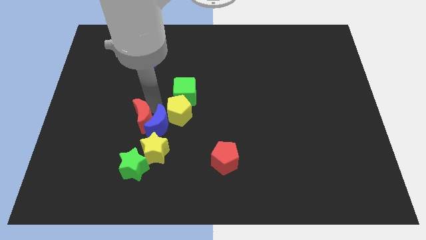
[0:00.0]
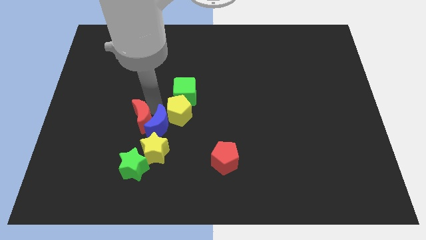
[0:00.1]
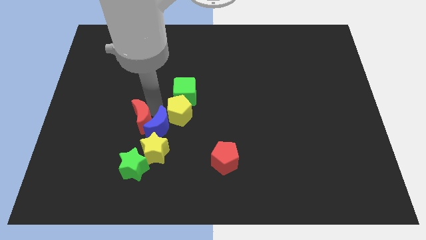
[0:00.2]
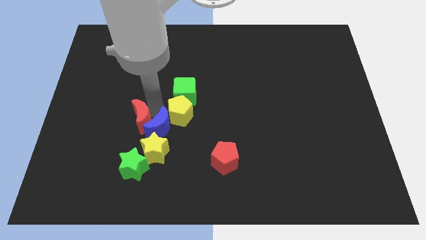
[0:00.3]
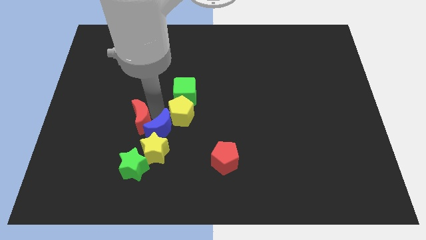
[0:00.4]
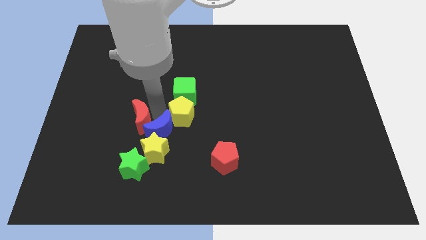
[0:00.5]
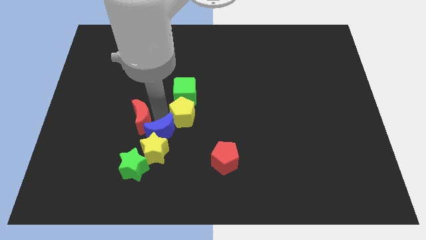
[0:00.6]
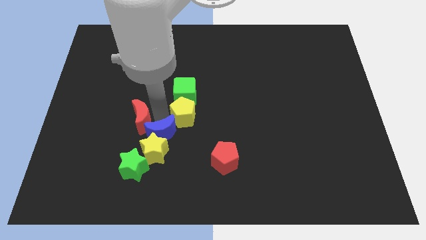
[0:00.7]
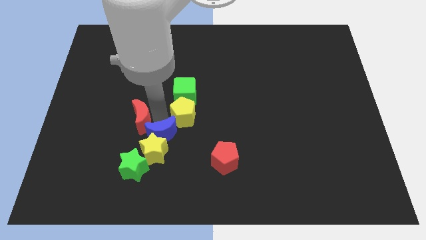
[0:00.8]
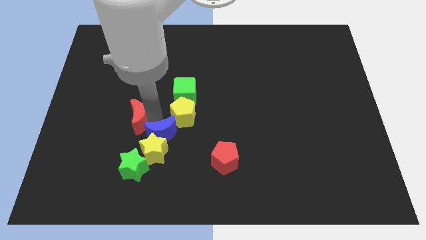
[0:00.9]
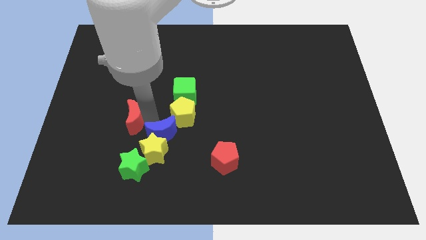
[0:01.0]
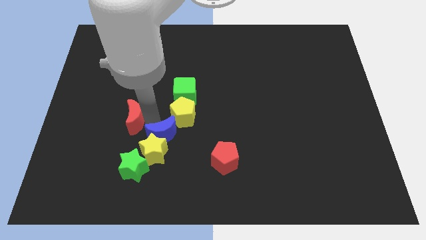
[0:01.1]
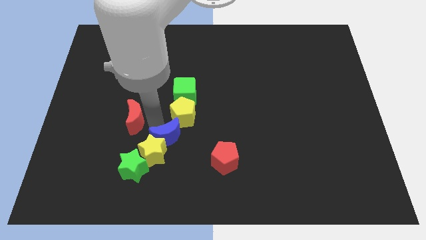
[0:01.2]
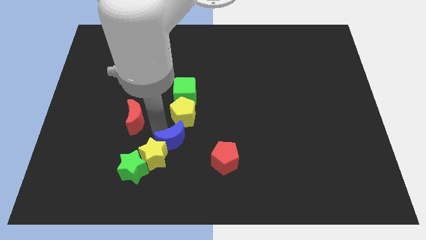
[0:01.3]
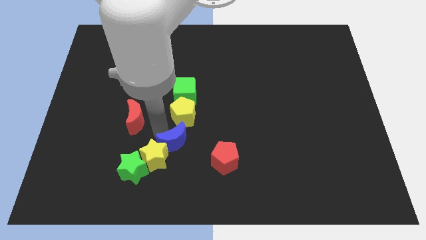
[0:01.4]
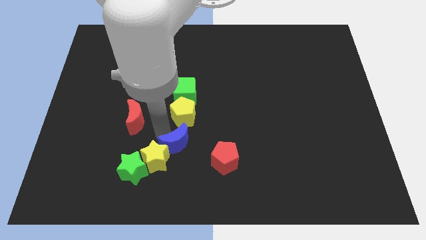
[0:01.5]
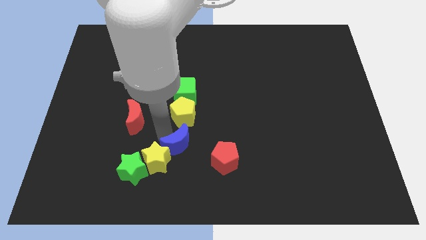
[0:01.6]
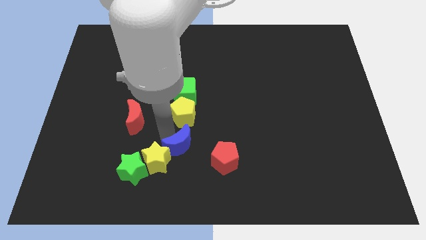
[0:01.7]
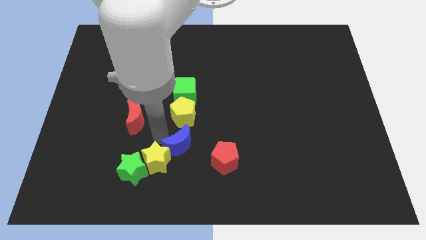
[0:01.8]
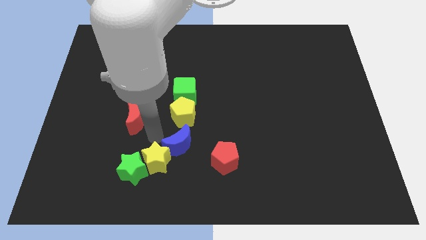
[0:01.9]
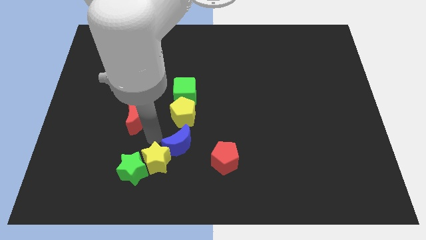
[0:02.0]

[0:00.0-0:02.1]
separate the blue crescent from the red crescent

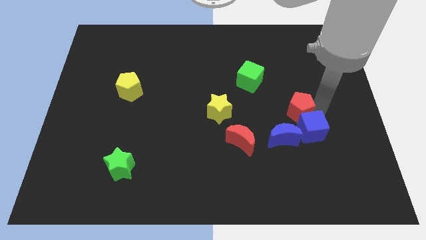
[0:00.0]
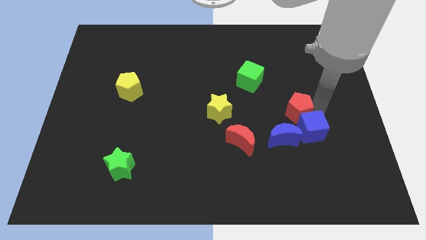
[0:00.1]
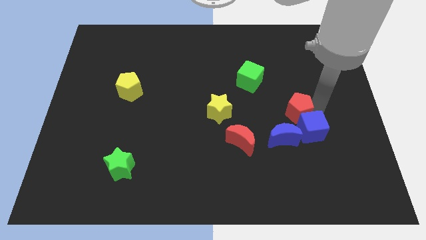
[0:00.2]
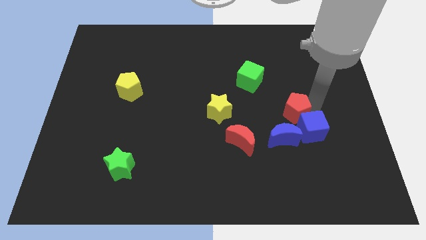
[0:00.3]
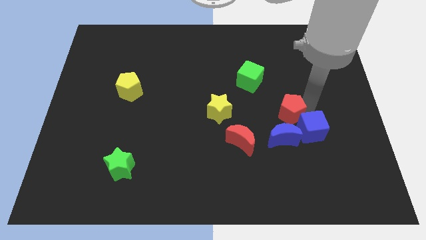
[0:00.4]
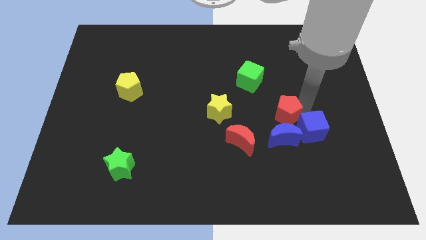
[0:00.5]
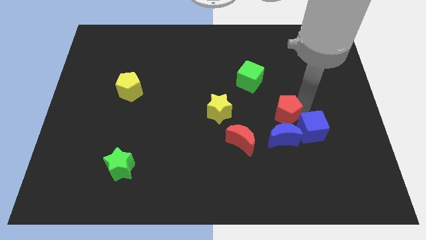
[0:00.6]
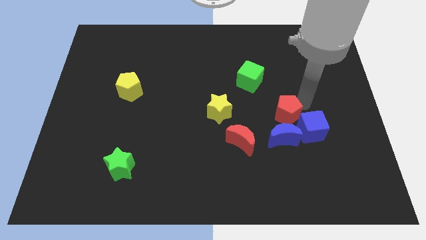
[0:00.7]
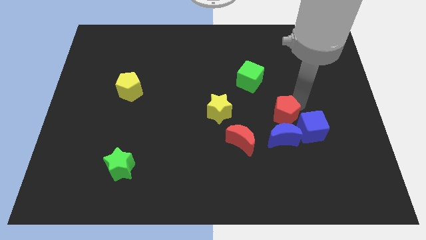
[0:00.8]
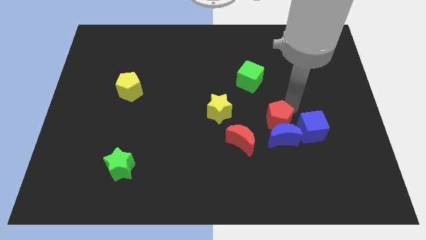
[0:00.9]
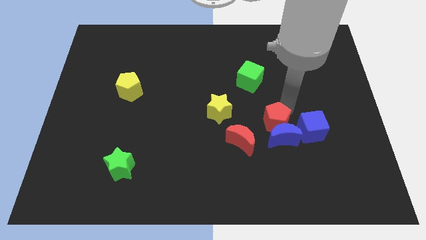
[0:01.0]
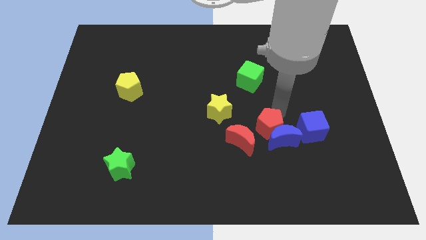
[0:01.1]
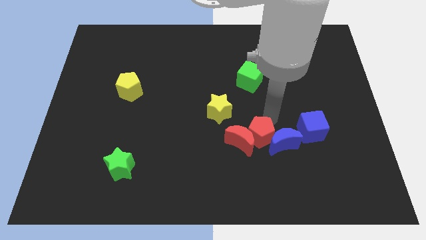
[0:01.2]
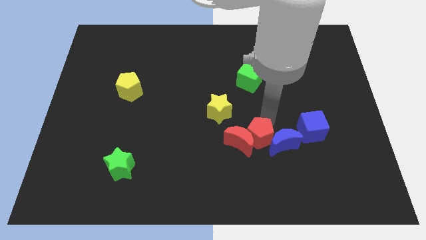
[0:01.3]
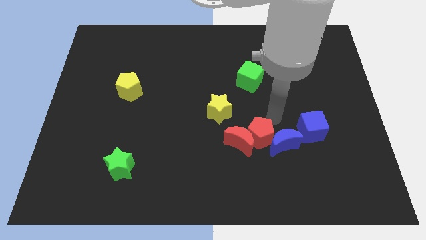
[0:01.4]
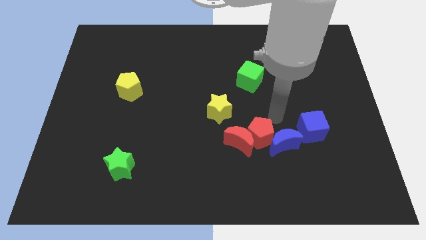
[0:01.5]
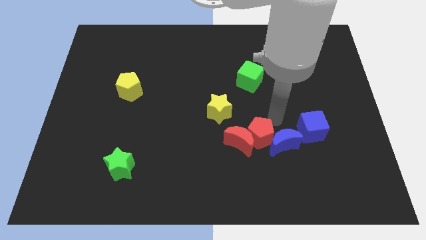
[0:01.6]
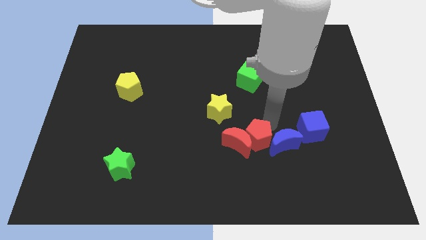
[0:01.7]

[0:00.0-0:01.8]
push the red pentagon into the red moon

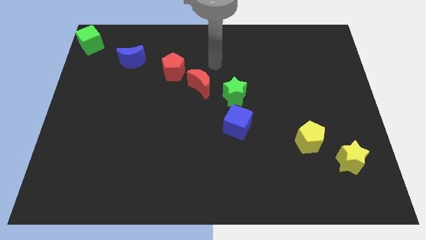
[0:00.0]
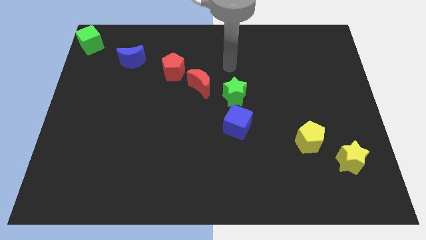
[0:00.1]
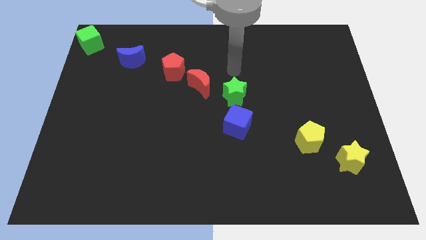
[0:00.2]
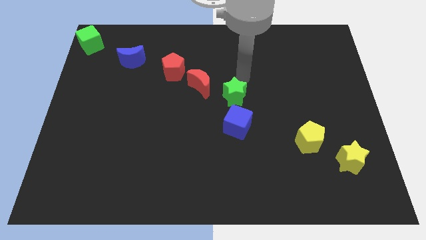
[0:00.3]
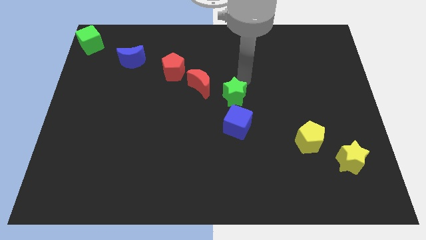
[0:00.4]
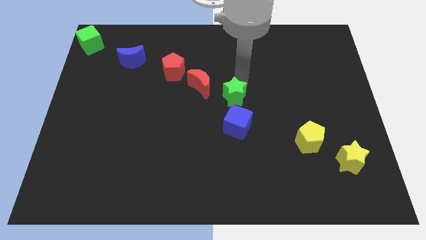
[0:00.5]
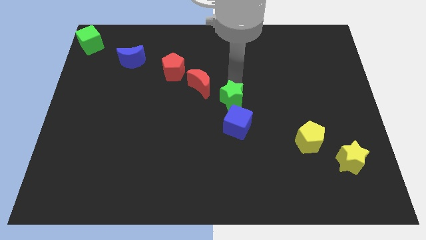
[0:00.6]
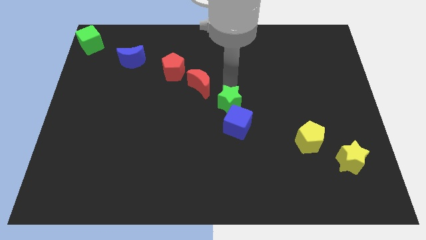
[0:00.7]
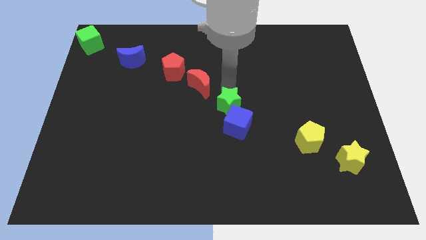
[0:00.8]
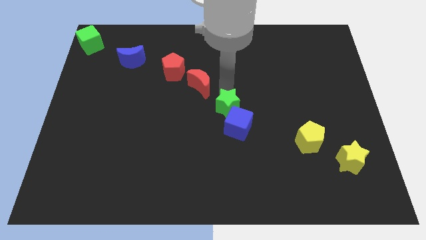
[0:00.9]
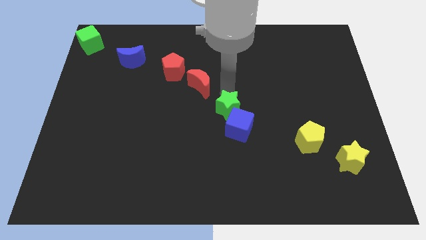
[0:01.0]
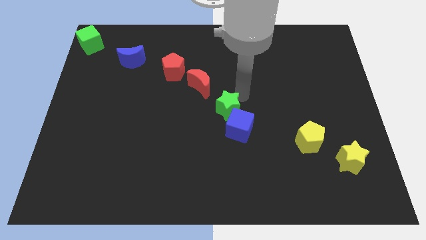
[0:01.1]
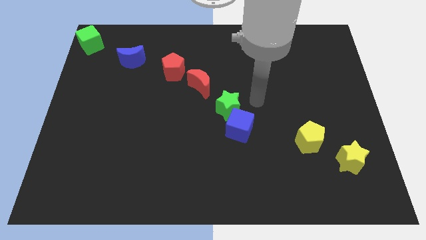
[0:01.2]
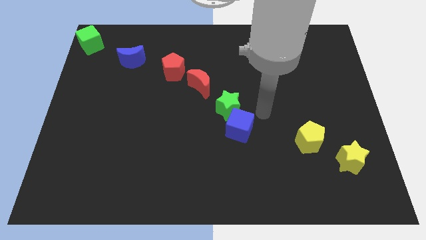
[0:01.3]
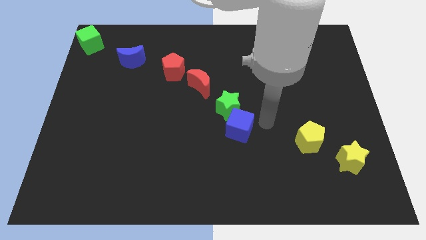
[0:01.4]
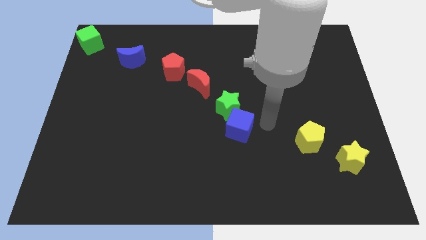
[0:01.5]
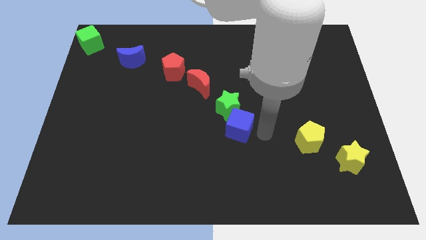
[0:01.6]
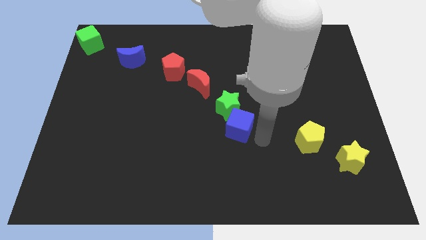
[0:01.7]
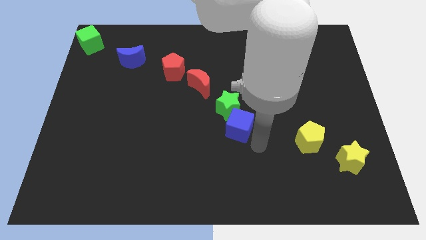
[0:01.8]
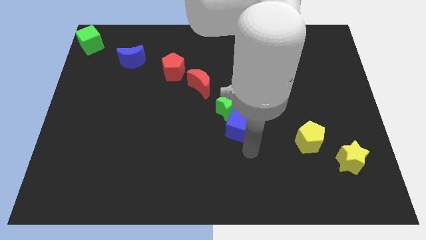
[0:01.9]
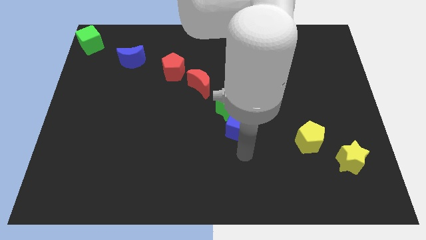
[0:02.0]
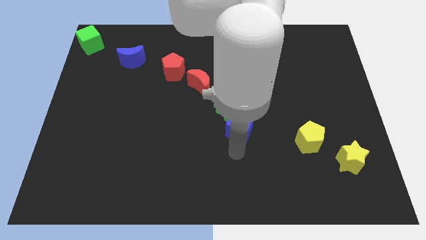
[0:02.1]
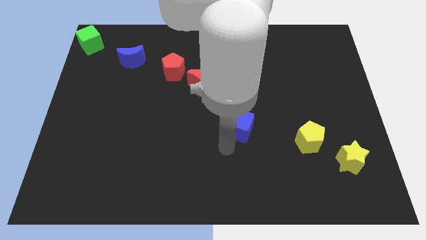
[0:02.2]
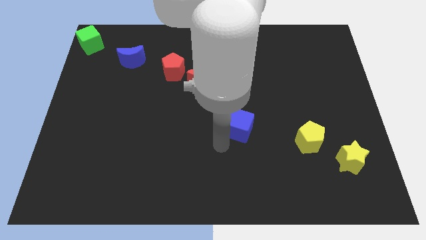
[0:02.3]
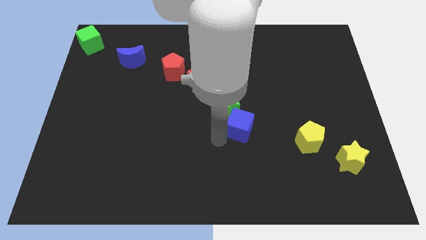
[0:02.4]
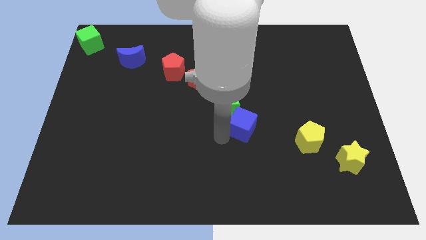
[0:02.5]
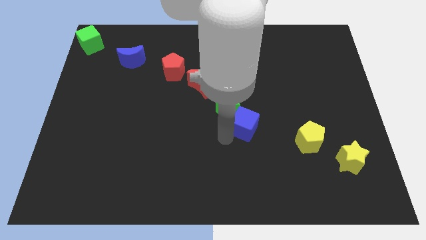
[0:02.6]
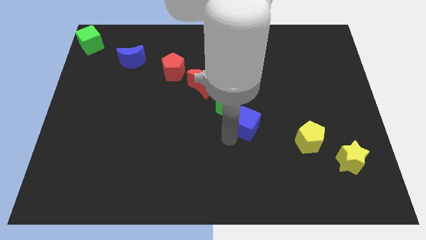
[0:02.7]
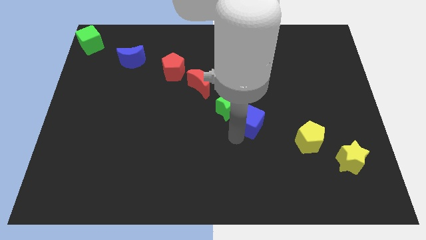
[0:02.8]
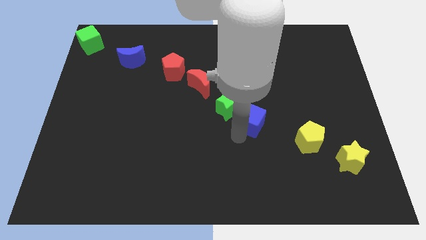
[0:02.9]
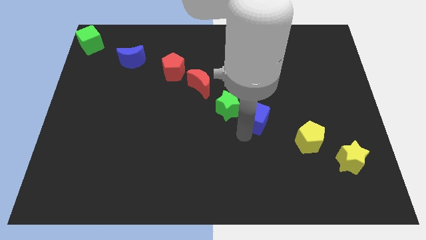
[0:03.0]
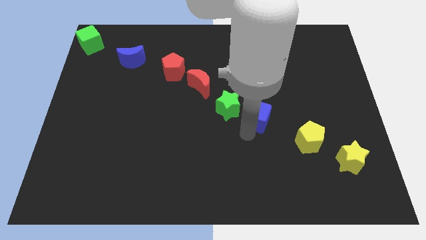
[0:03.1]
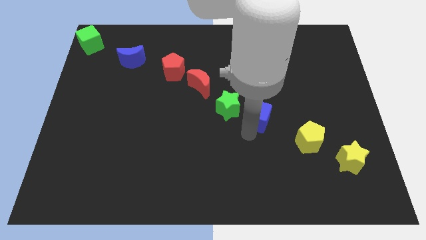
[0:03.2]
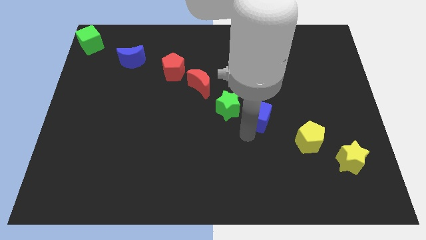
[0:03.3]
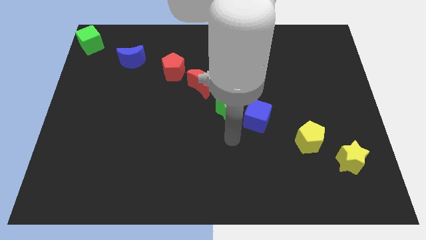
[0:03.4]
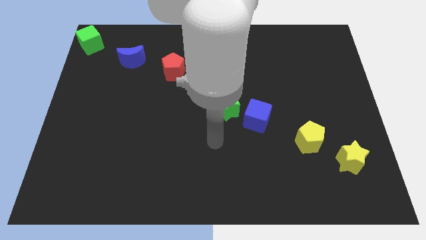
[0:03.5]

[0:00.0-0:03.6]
push the green star into the blue cube

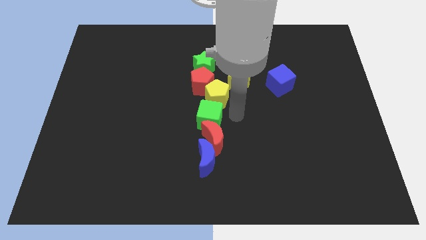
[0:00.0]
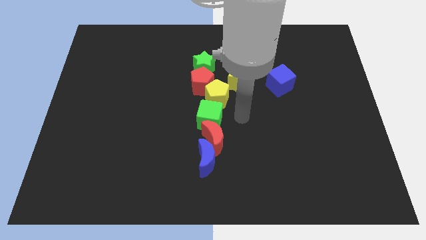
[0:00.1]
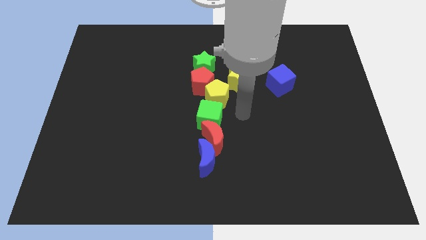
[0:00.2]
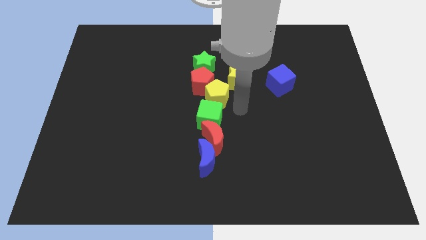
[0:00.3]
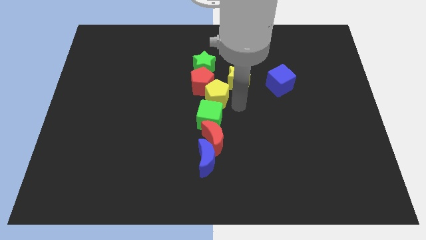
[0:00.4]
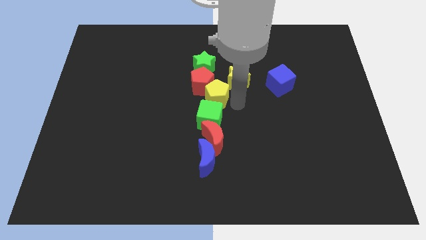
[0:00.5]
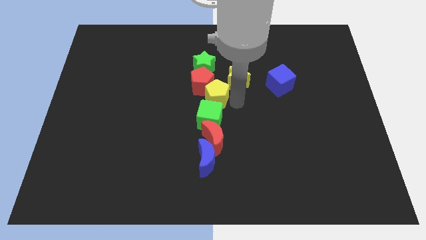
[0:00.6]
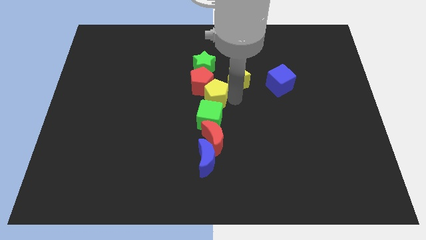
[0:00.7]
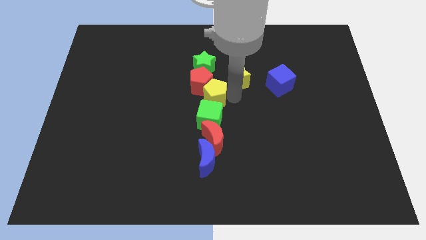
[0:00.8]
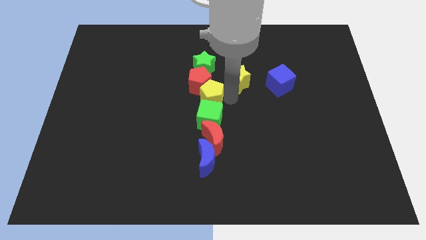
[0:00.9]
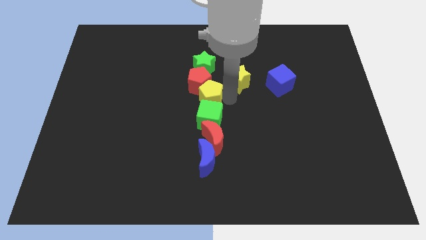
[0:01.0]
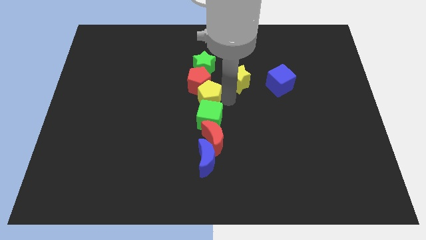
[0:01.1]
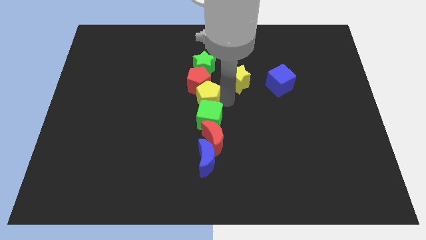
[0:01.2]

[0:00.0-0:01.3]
slightly push the yellow pentagon to the left
